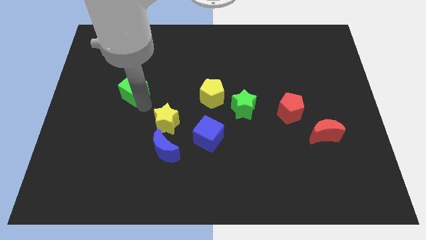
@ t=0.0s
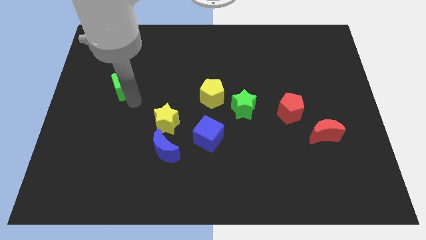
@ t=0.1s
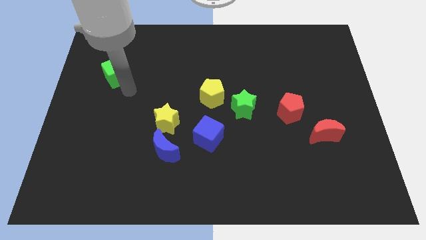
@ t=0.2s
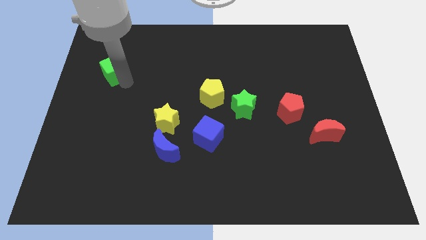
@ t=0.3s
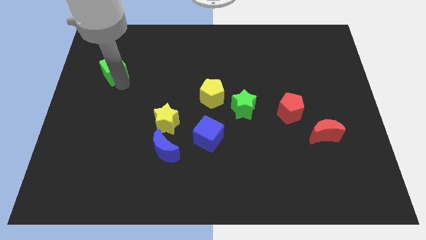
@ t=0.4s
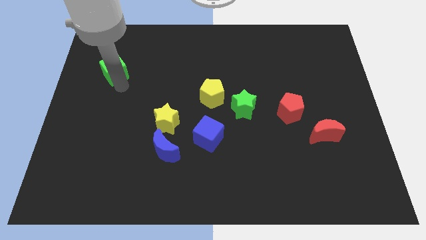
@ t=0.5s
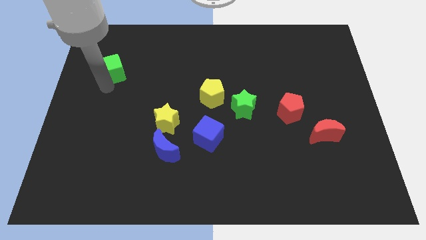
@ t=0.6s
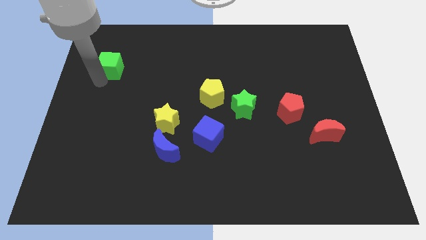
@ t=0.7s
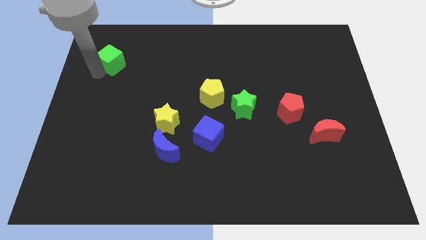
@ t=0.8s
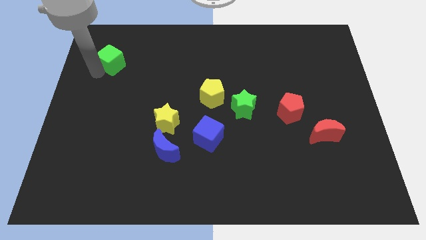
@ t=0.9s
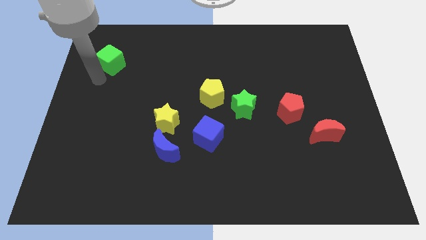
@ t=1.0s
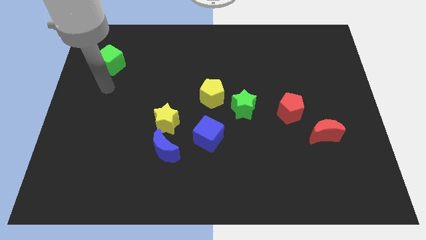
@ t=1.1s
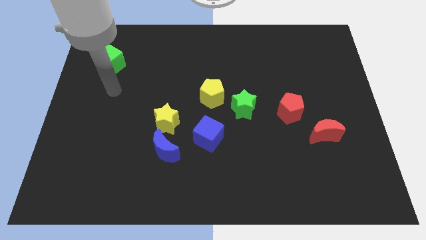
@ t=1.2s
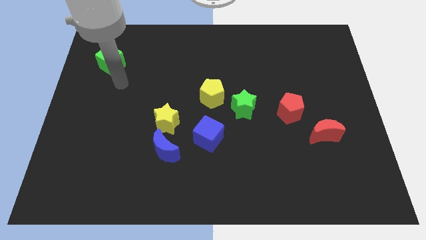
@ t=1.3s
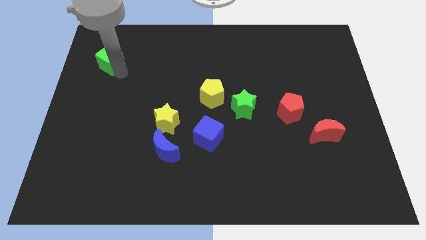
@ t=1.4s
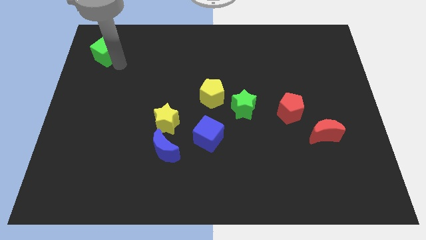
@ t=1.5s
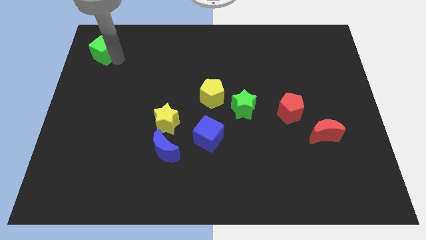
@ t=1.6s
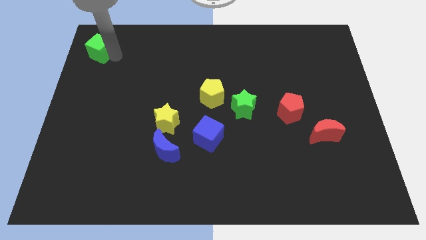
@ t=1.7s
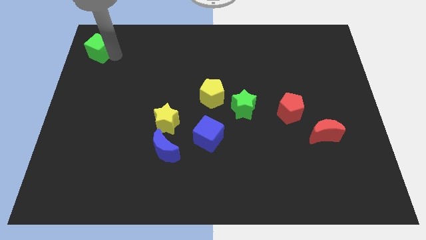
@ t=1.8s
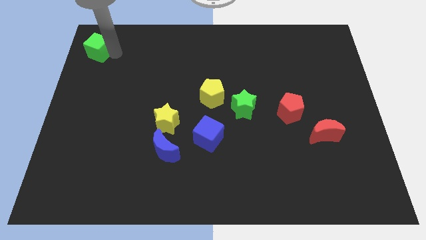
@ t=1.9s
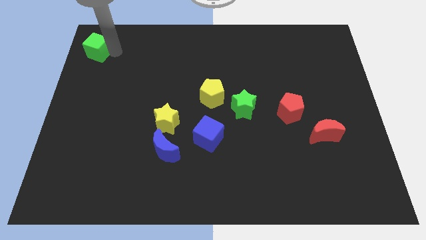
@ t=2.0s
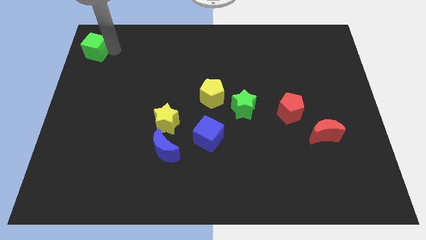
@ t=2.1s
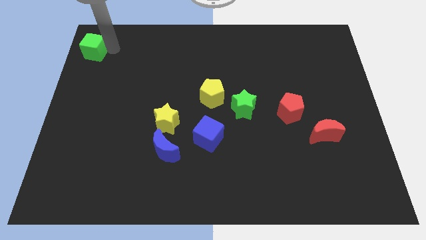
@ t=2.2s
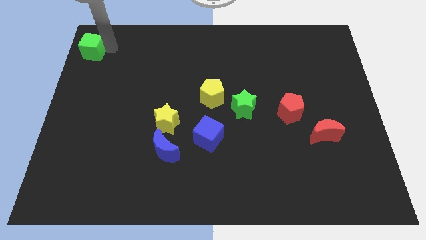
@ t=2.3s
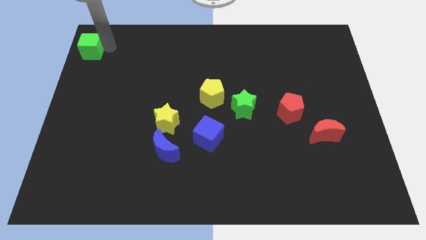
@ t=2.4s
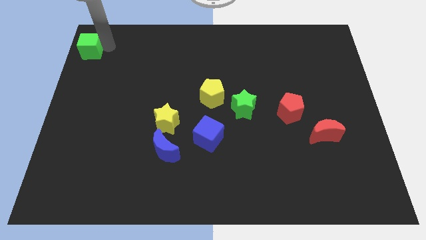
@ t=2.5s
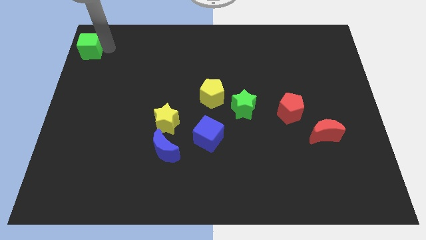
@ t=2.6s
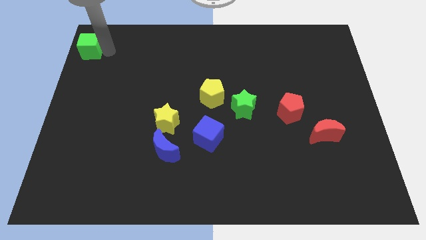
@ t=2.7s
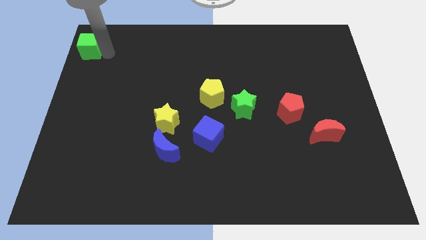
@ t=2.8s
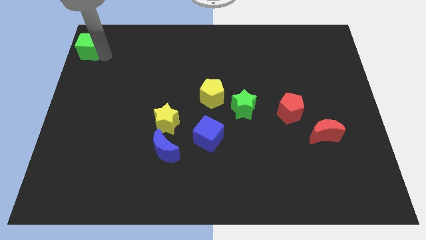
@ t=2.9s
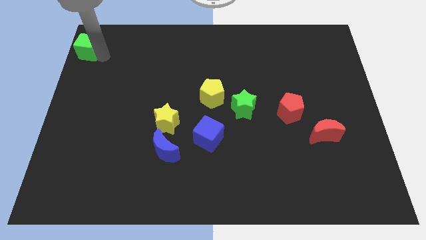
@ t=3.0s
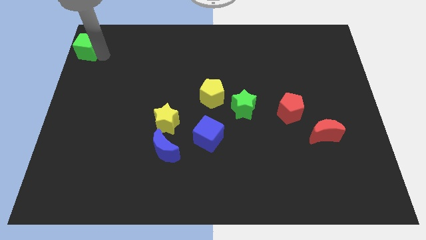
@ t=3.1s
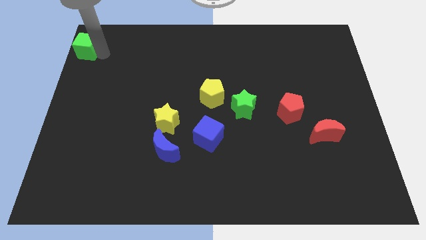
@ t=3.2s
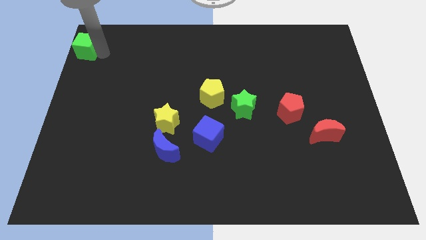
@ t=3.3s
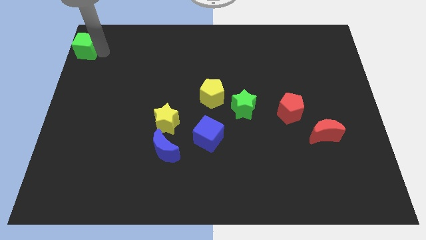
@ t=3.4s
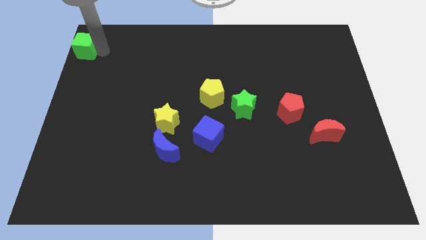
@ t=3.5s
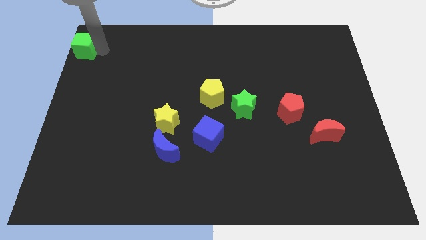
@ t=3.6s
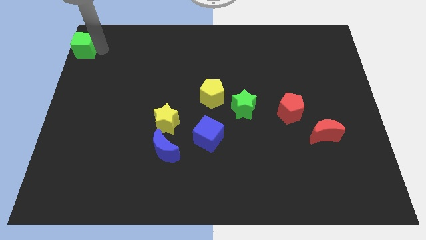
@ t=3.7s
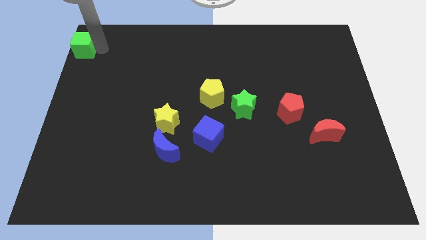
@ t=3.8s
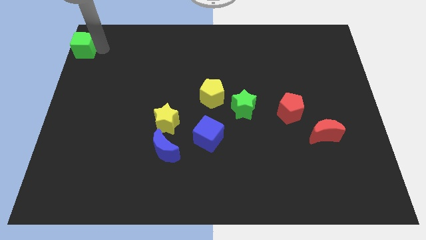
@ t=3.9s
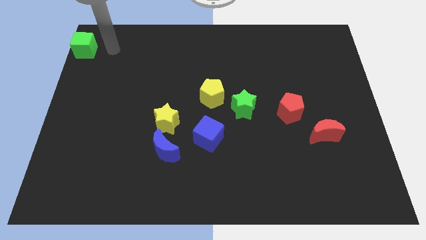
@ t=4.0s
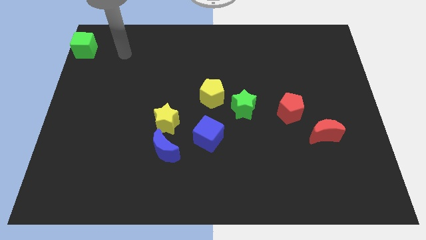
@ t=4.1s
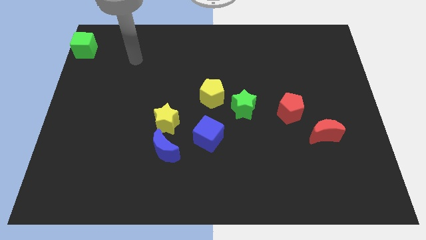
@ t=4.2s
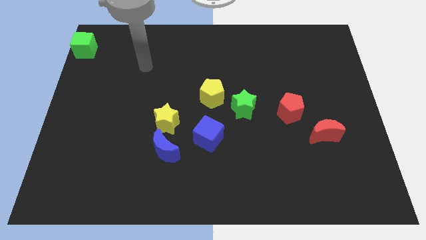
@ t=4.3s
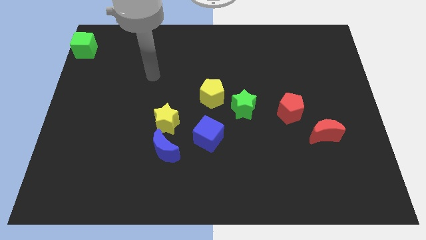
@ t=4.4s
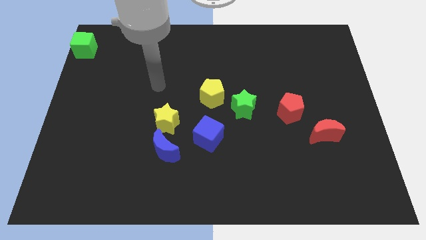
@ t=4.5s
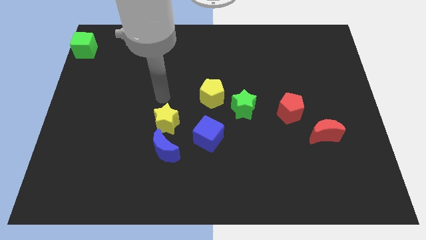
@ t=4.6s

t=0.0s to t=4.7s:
move the green cube towards the top left corner of the board

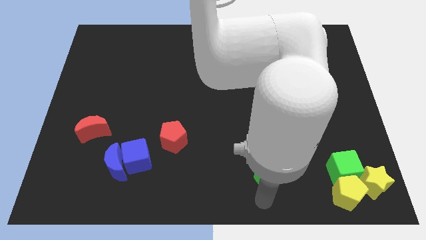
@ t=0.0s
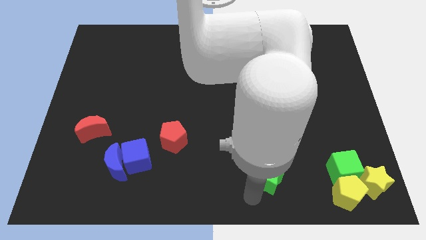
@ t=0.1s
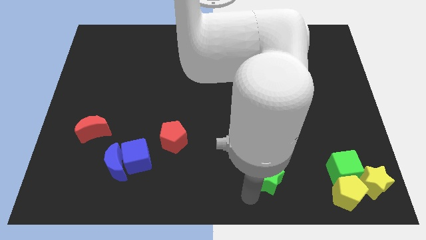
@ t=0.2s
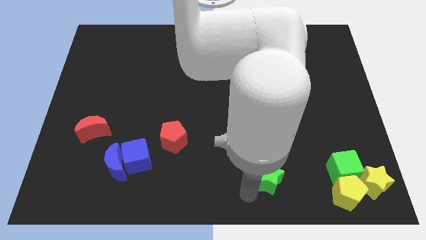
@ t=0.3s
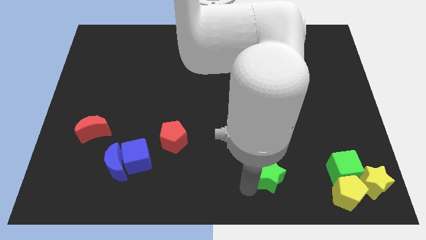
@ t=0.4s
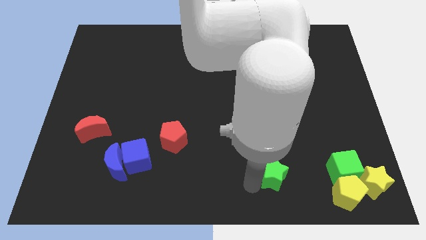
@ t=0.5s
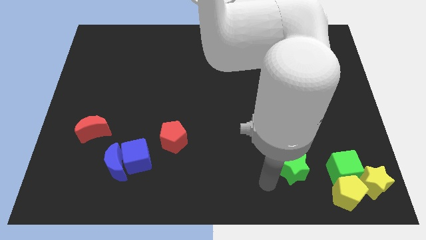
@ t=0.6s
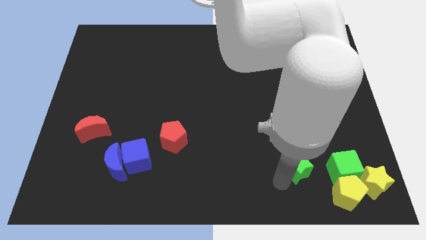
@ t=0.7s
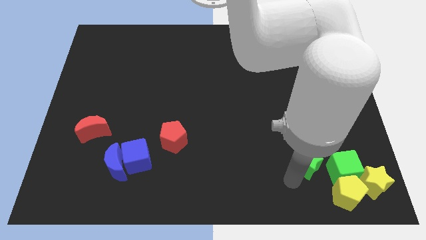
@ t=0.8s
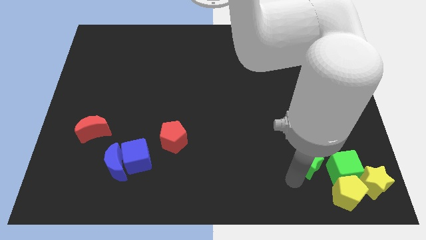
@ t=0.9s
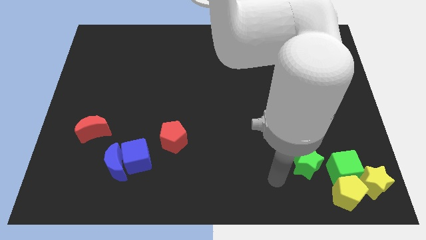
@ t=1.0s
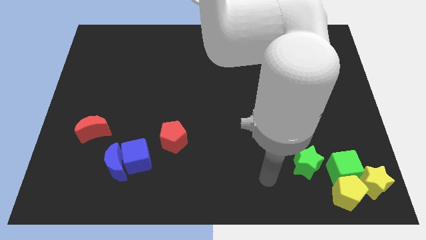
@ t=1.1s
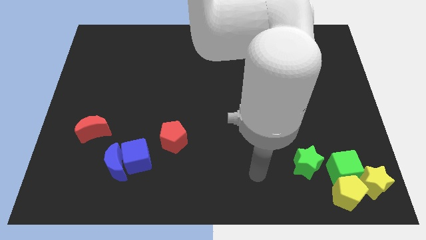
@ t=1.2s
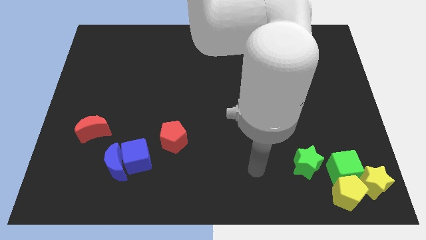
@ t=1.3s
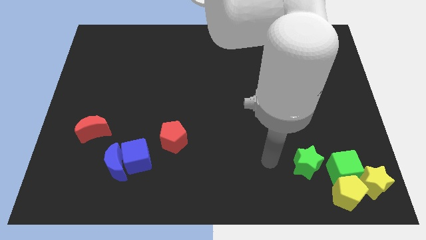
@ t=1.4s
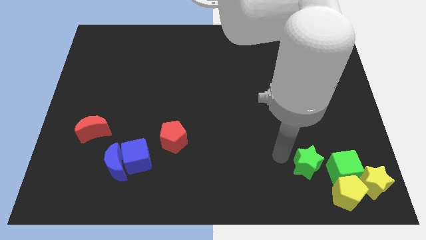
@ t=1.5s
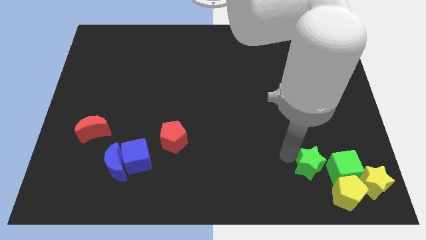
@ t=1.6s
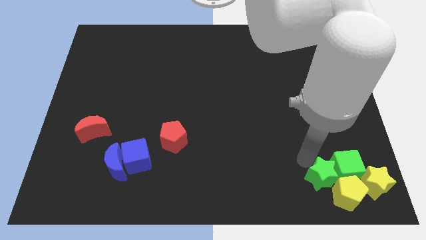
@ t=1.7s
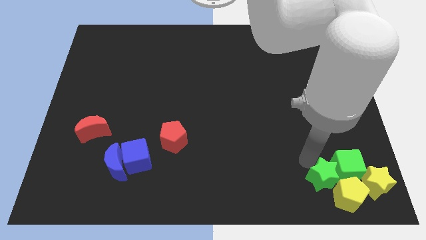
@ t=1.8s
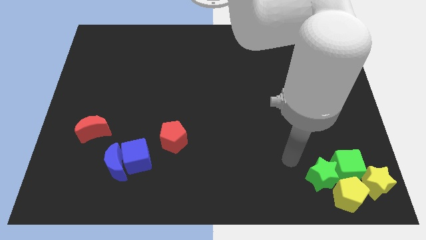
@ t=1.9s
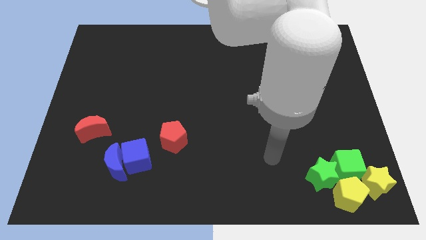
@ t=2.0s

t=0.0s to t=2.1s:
place the green star into the green and yellow blocks

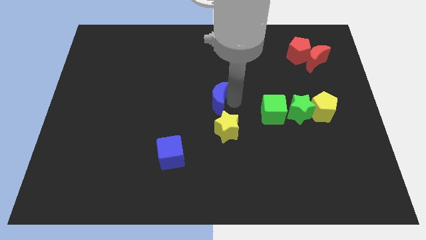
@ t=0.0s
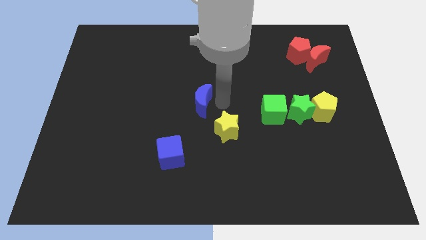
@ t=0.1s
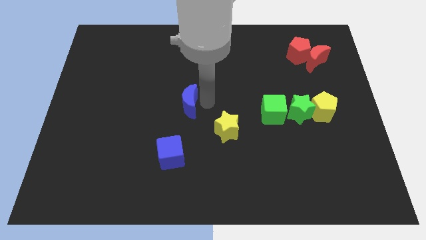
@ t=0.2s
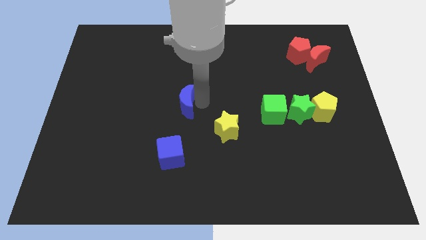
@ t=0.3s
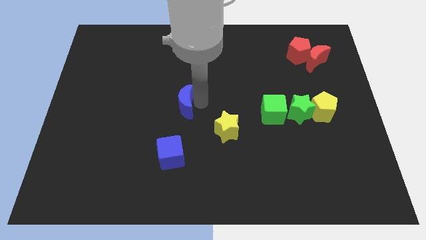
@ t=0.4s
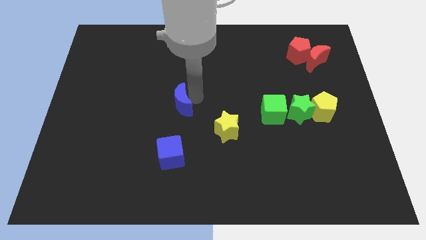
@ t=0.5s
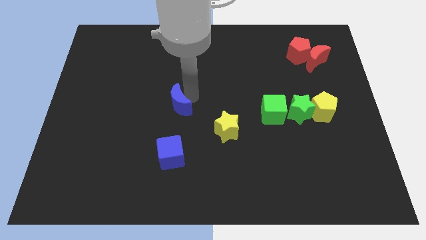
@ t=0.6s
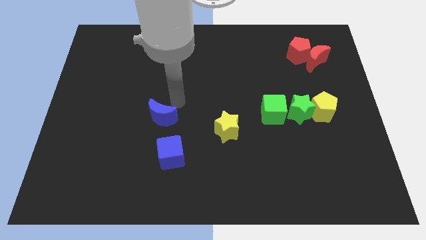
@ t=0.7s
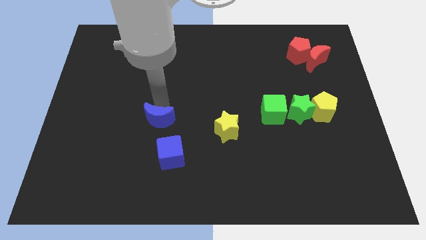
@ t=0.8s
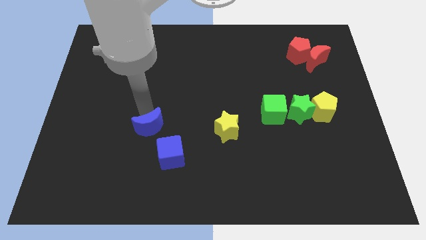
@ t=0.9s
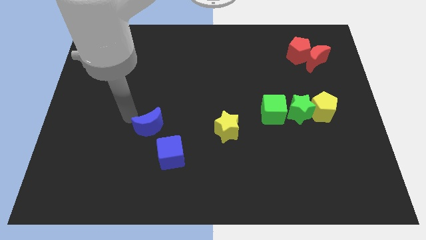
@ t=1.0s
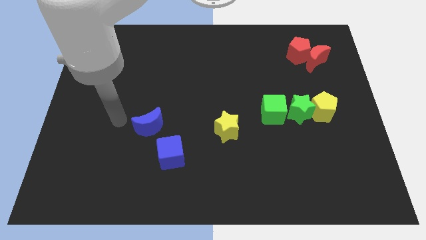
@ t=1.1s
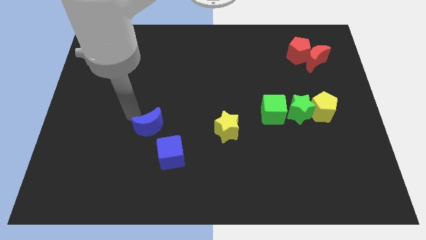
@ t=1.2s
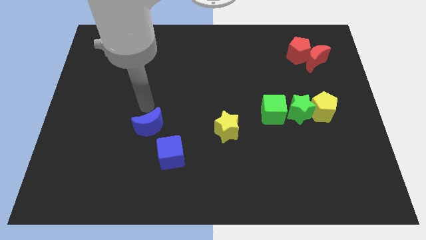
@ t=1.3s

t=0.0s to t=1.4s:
place the blue crescent above the blue cube

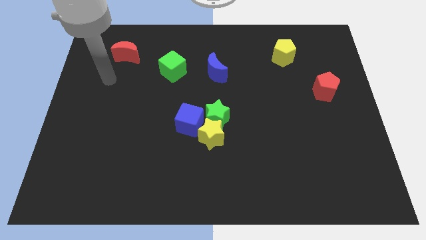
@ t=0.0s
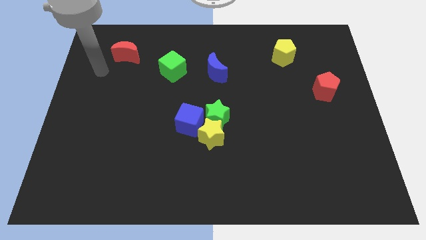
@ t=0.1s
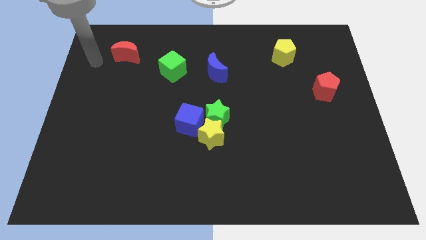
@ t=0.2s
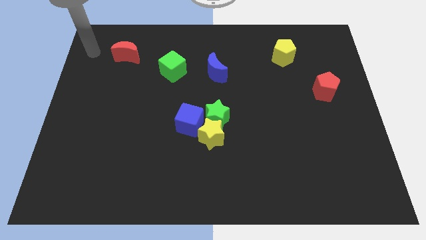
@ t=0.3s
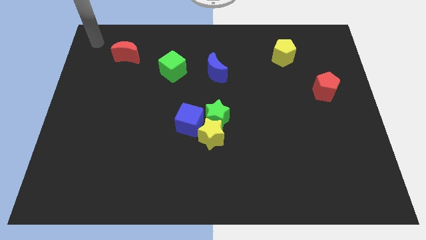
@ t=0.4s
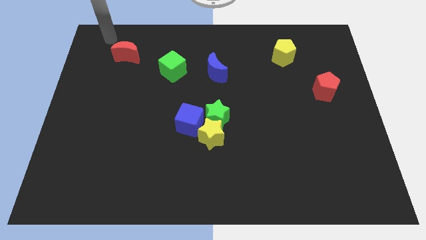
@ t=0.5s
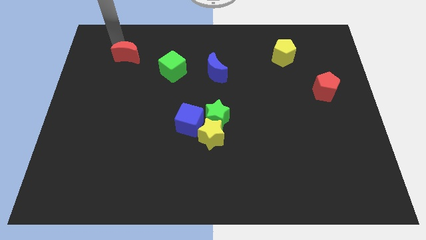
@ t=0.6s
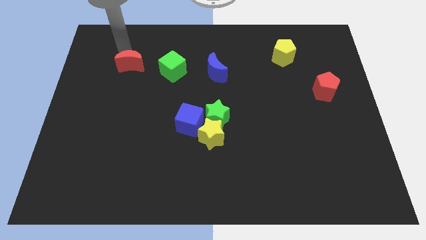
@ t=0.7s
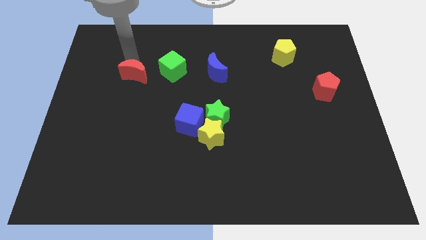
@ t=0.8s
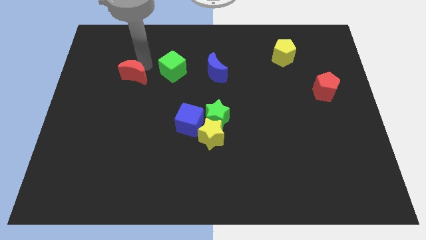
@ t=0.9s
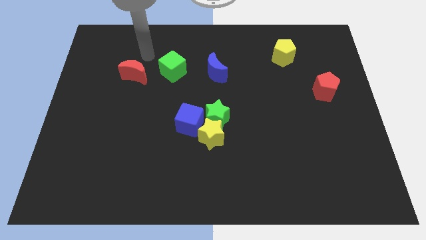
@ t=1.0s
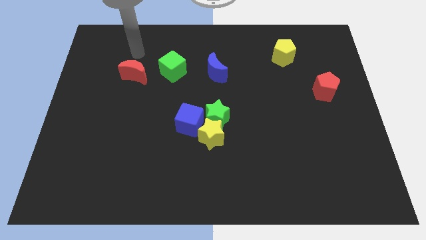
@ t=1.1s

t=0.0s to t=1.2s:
push the red crescent to the left of the green cube
